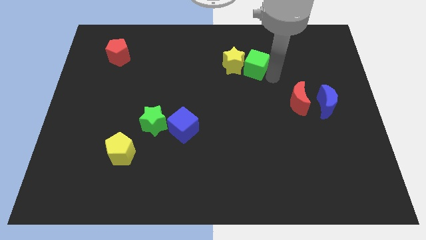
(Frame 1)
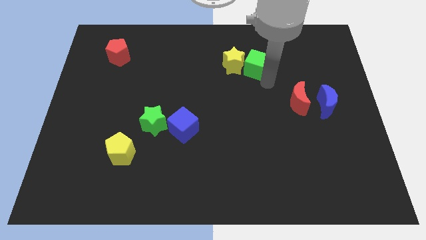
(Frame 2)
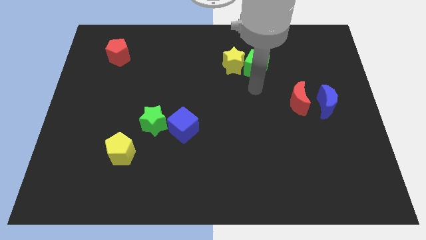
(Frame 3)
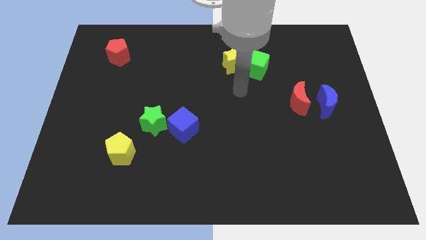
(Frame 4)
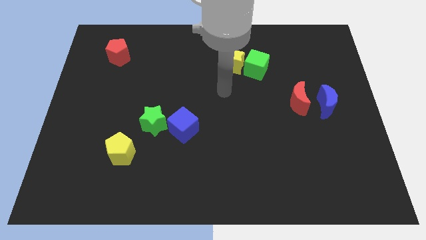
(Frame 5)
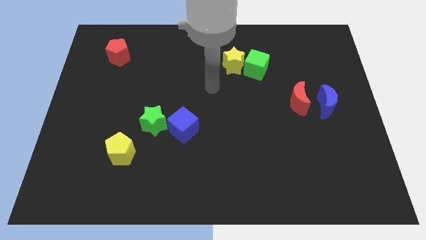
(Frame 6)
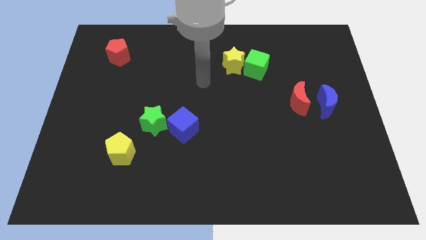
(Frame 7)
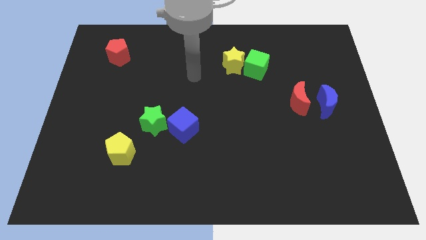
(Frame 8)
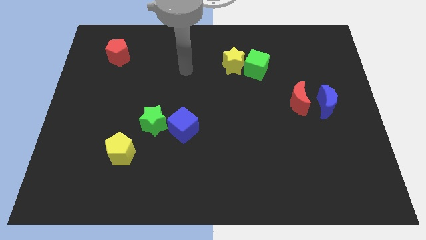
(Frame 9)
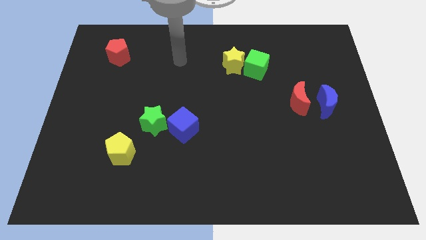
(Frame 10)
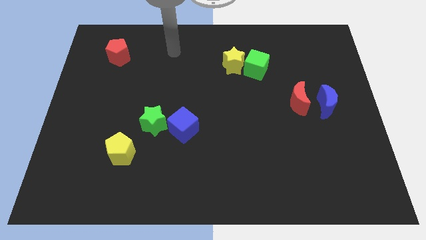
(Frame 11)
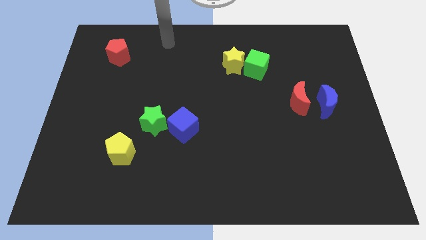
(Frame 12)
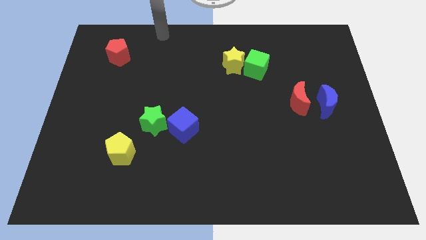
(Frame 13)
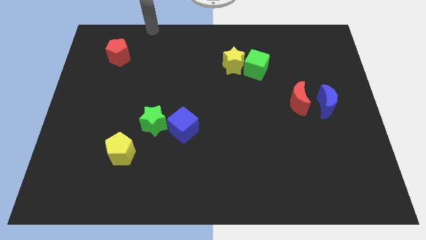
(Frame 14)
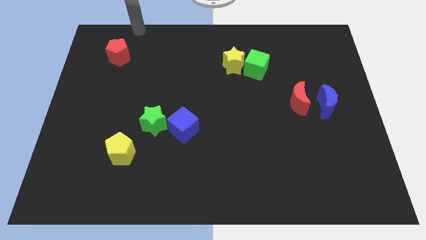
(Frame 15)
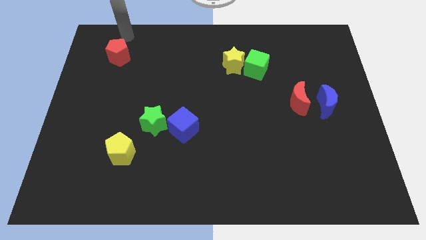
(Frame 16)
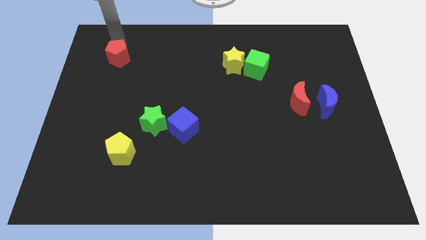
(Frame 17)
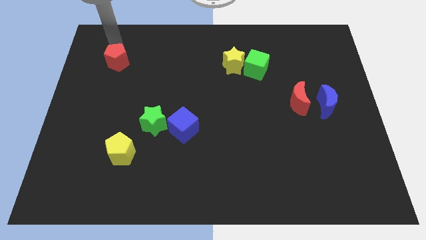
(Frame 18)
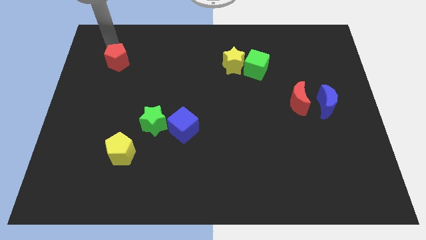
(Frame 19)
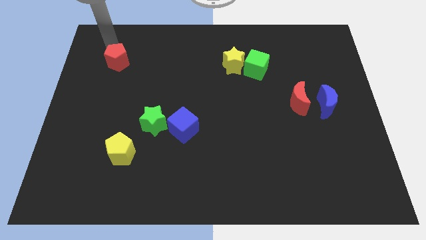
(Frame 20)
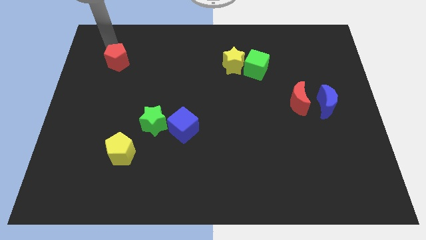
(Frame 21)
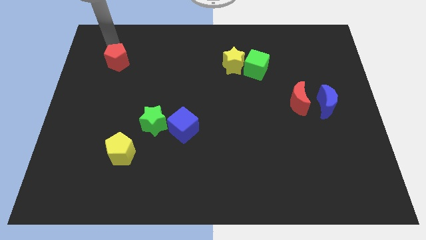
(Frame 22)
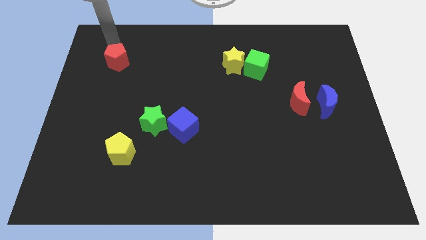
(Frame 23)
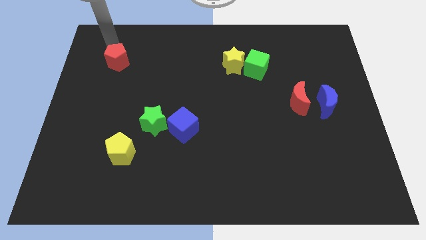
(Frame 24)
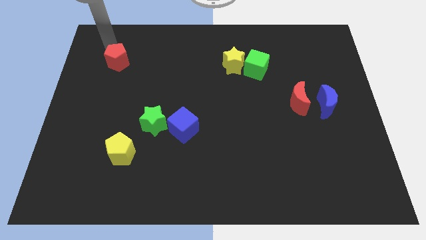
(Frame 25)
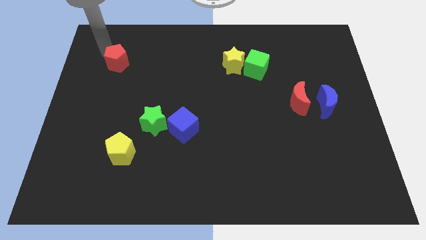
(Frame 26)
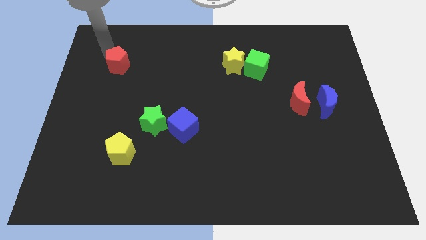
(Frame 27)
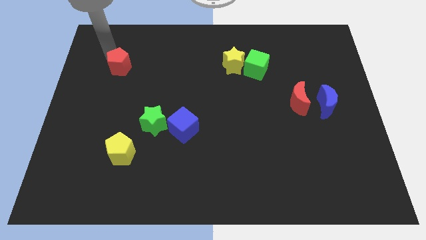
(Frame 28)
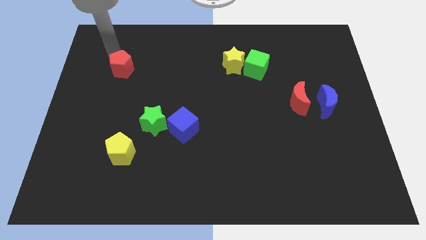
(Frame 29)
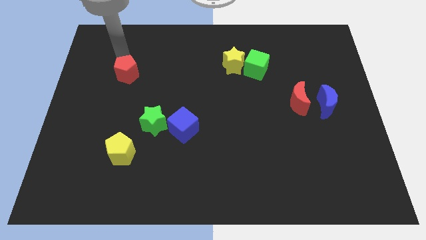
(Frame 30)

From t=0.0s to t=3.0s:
move red pentagon slightly to the bottom side

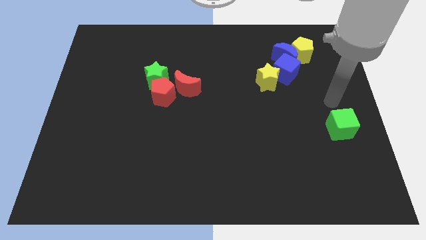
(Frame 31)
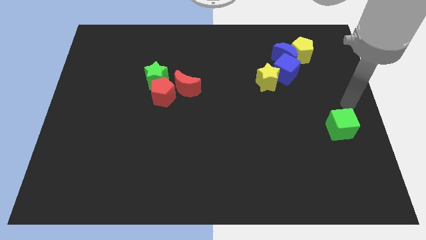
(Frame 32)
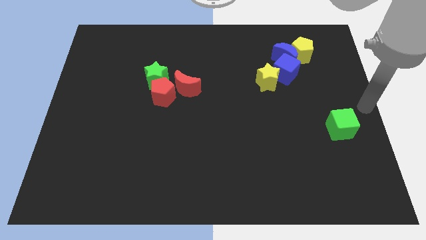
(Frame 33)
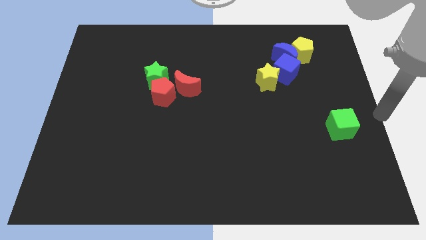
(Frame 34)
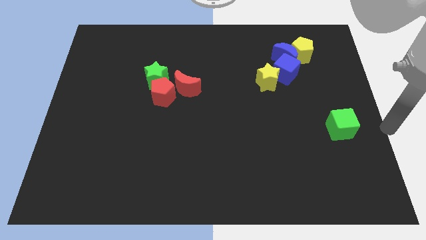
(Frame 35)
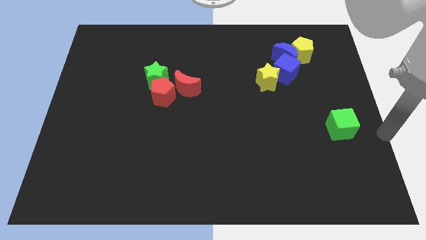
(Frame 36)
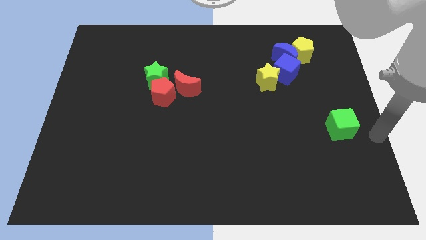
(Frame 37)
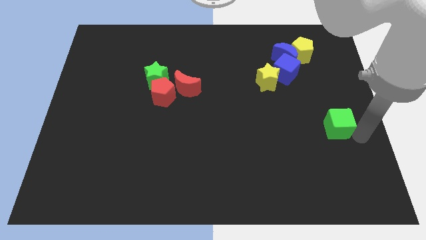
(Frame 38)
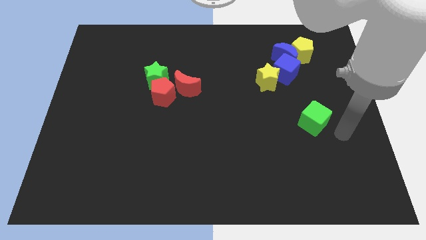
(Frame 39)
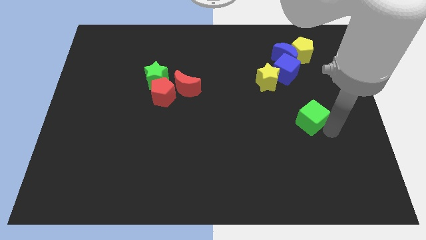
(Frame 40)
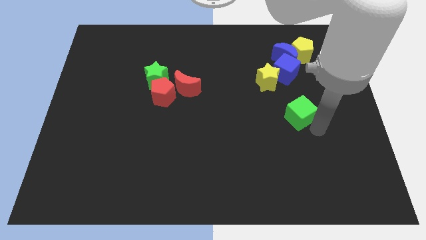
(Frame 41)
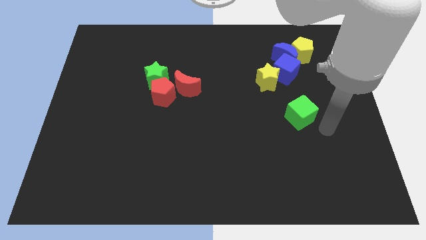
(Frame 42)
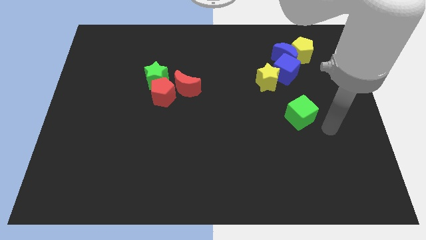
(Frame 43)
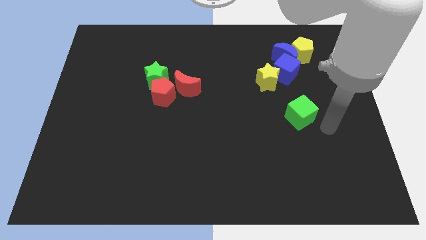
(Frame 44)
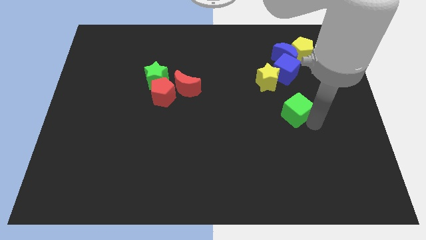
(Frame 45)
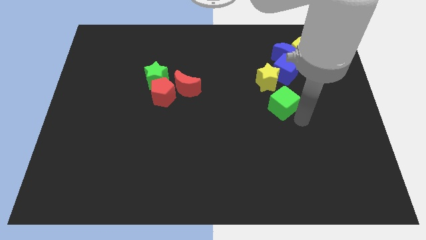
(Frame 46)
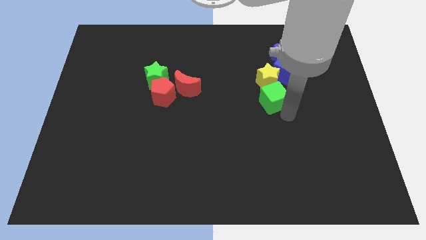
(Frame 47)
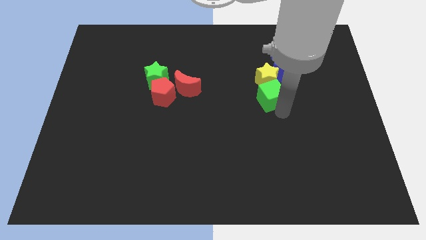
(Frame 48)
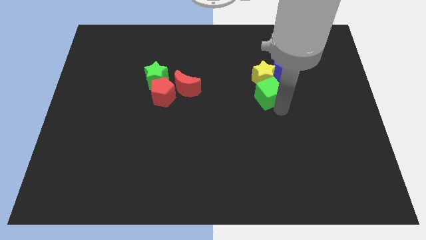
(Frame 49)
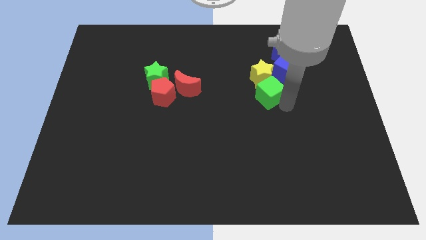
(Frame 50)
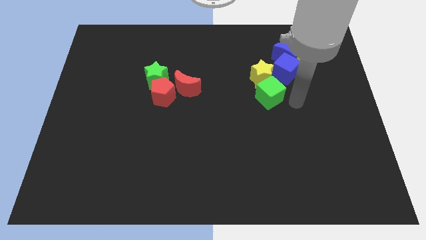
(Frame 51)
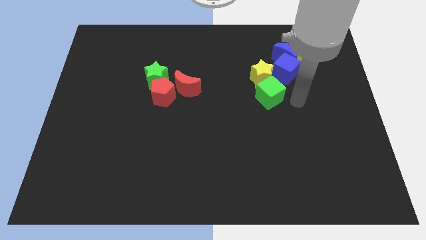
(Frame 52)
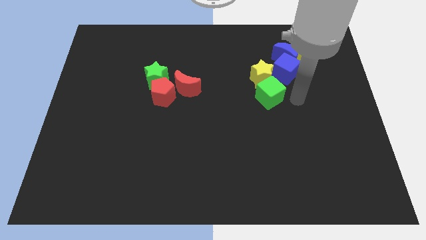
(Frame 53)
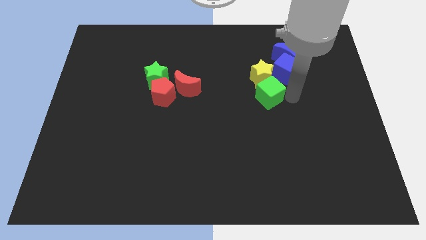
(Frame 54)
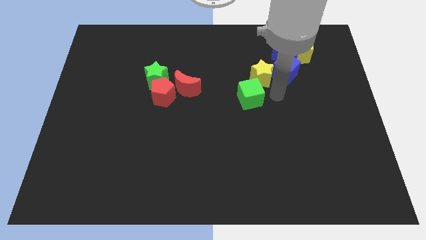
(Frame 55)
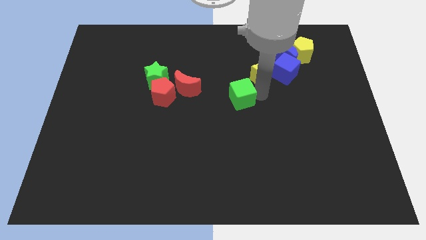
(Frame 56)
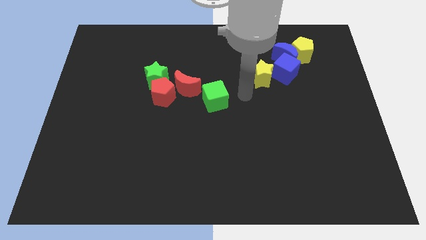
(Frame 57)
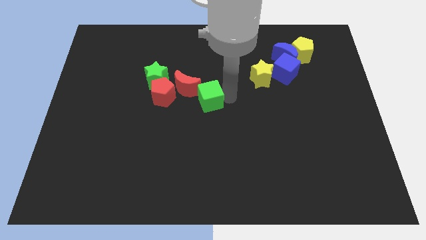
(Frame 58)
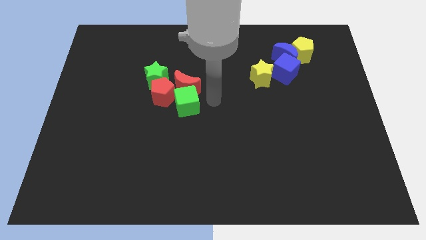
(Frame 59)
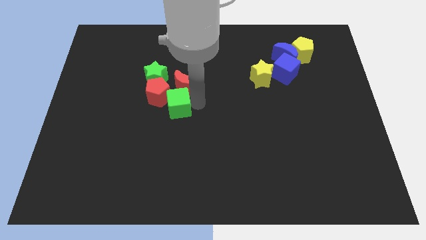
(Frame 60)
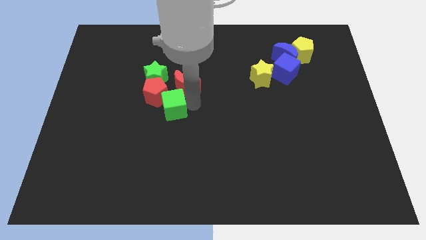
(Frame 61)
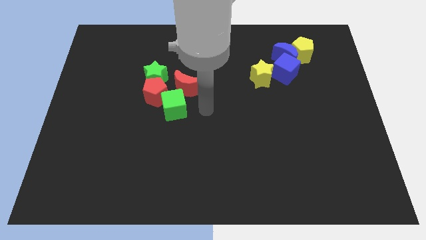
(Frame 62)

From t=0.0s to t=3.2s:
move the green cube into the bottom of the red pentagon

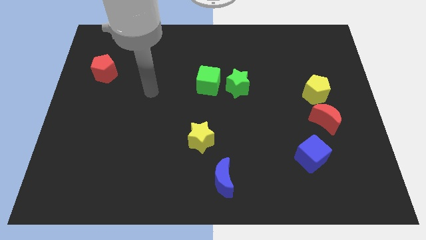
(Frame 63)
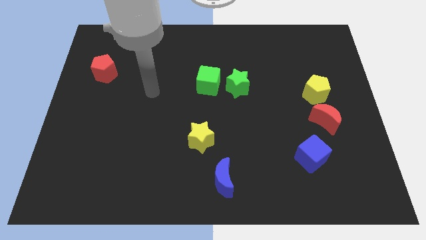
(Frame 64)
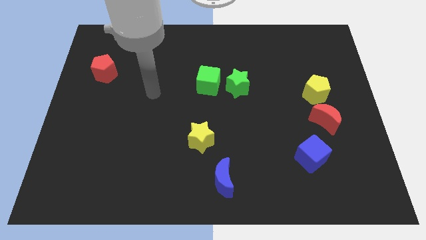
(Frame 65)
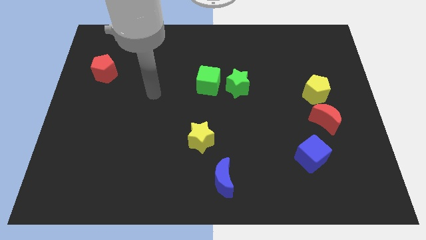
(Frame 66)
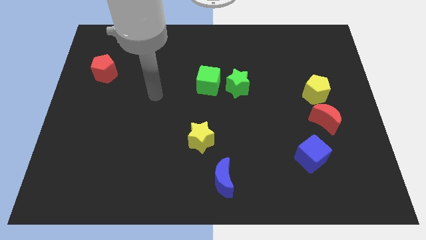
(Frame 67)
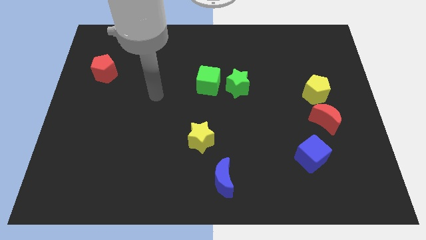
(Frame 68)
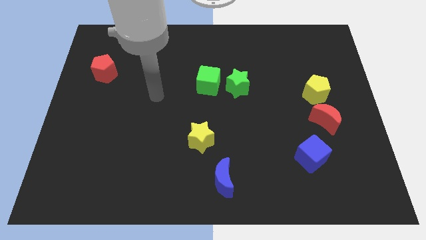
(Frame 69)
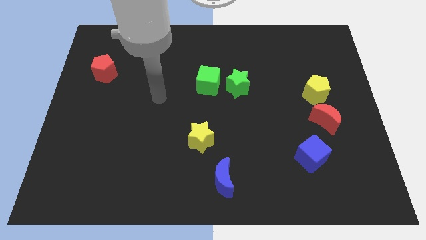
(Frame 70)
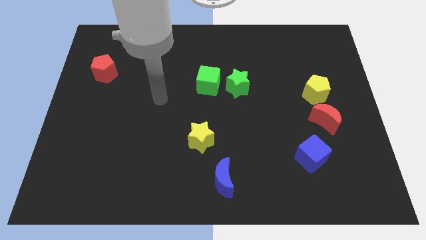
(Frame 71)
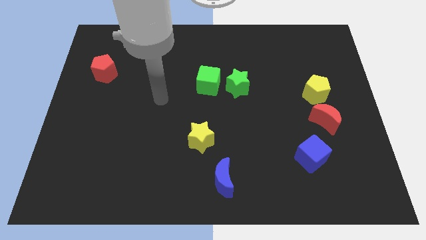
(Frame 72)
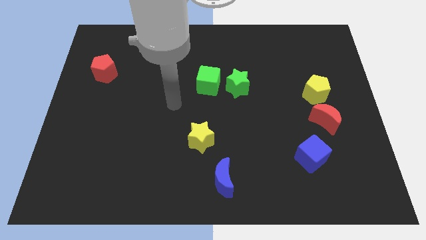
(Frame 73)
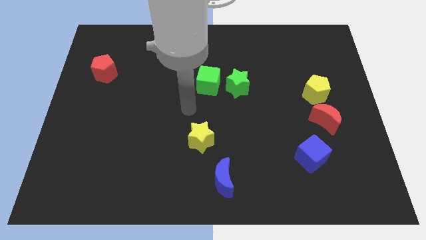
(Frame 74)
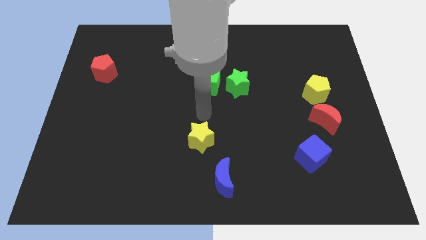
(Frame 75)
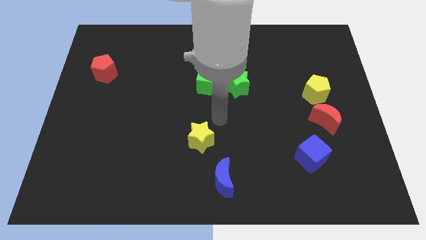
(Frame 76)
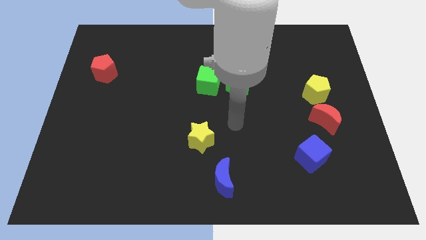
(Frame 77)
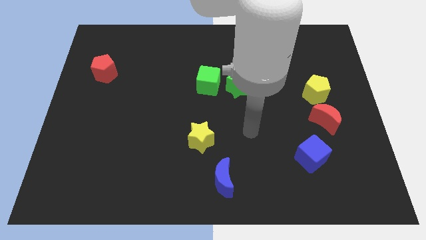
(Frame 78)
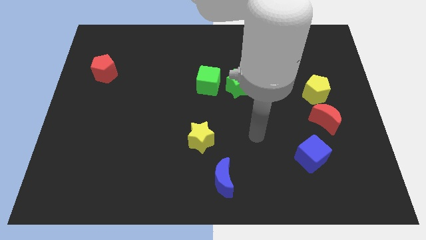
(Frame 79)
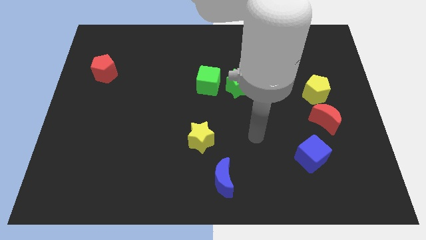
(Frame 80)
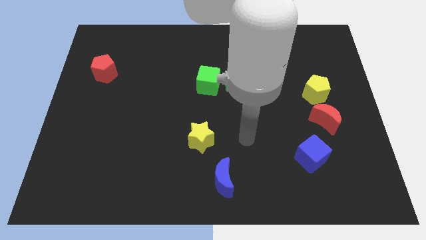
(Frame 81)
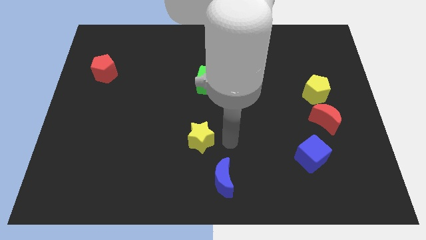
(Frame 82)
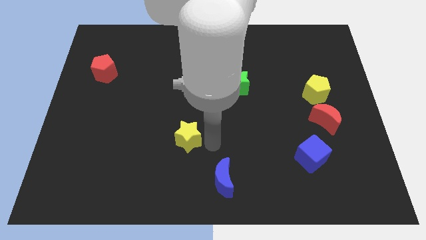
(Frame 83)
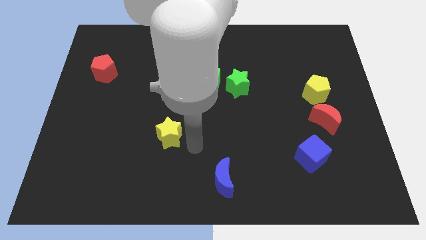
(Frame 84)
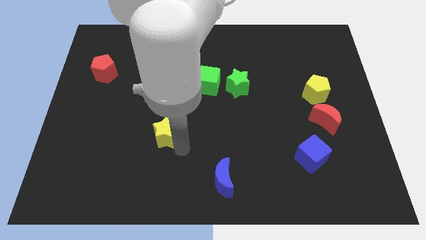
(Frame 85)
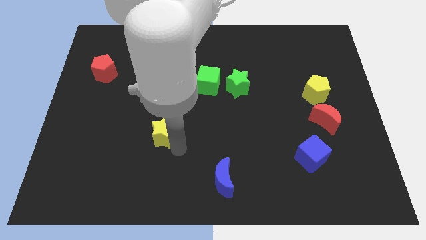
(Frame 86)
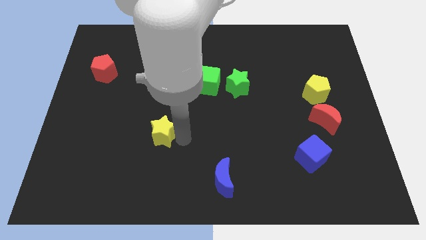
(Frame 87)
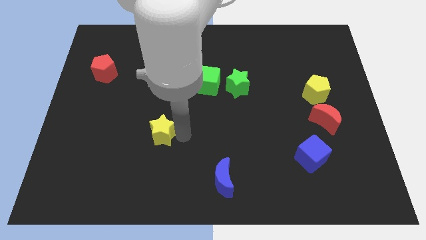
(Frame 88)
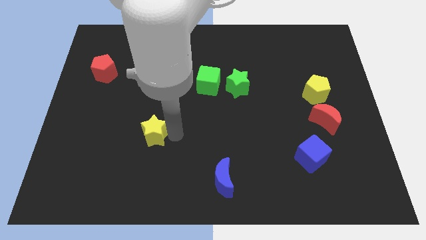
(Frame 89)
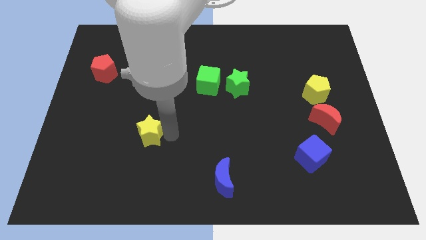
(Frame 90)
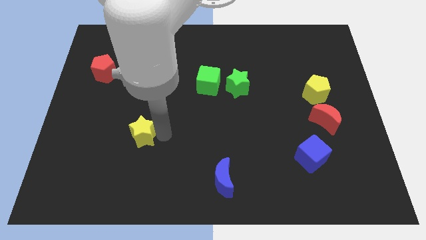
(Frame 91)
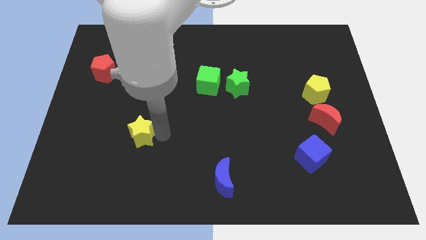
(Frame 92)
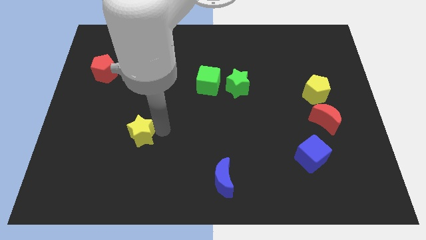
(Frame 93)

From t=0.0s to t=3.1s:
push the yellow star to the top left of the blue crescent
